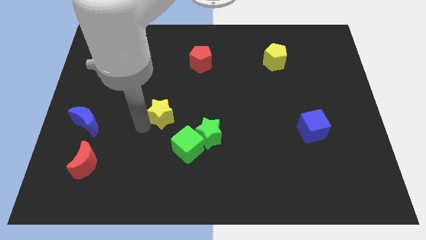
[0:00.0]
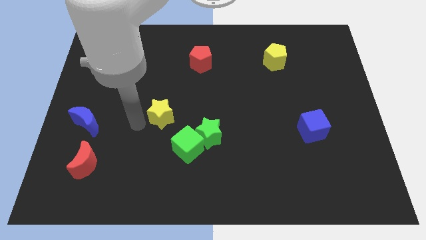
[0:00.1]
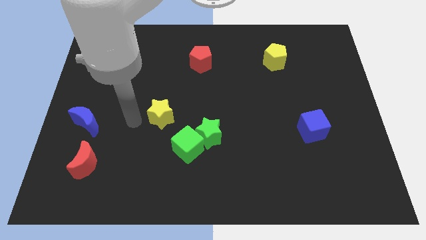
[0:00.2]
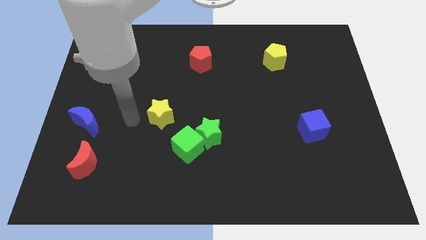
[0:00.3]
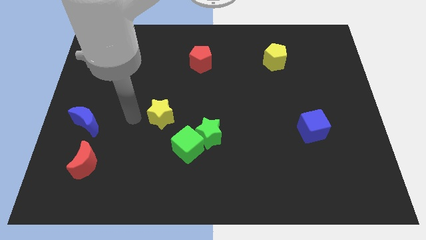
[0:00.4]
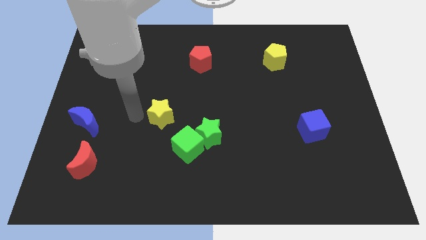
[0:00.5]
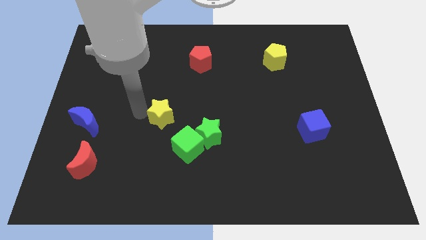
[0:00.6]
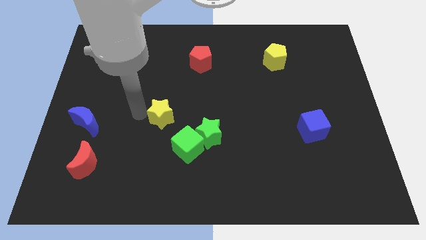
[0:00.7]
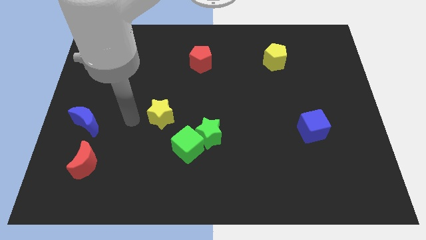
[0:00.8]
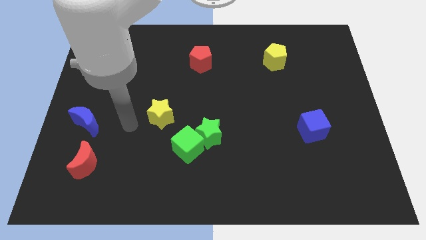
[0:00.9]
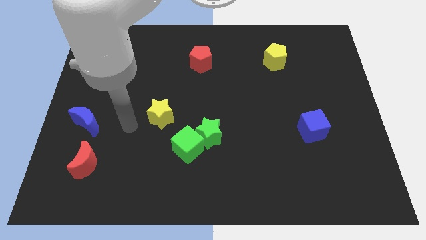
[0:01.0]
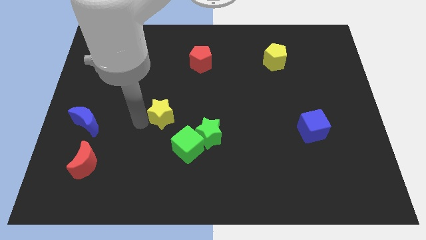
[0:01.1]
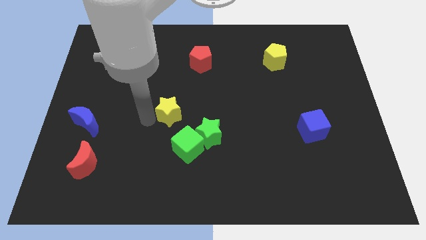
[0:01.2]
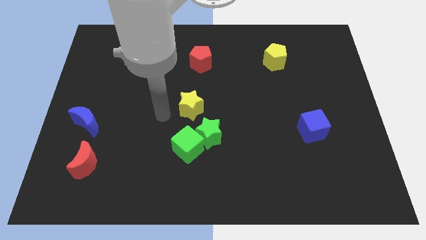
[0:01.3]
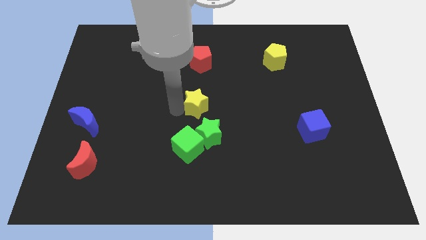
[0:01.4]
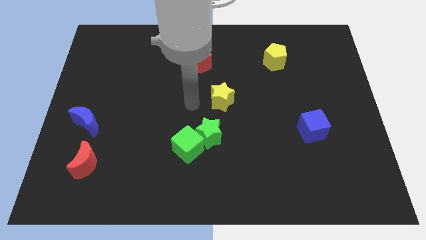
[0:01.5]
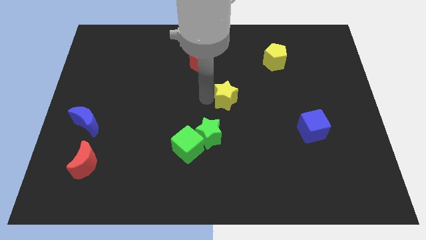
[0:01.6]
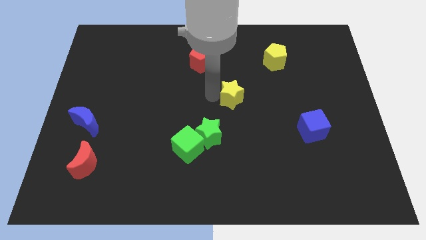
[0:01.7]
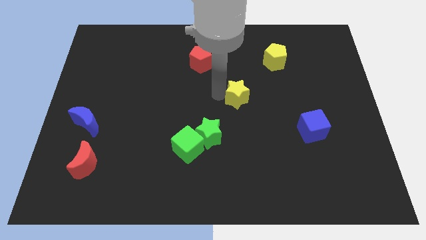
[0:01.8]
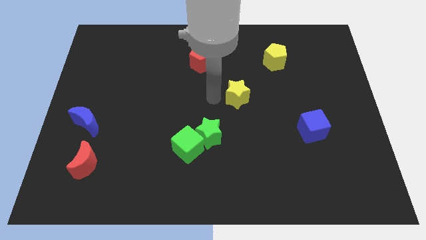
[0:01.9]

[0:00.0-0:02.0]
move the yellow star between green star and yellow pentagon

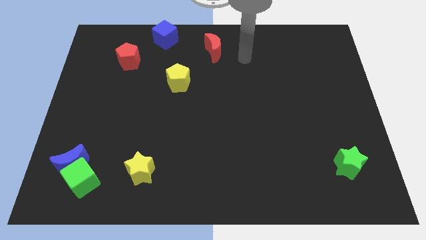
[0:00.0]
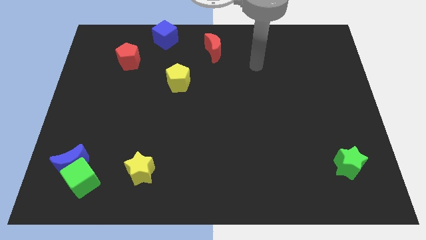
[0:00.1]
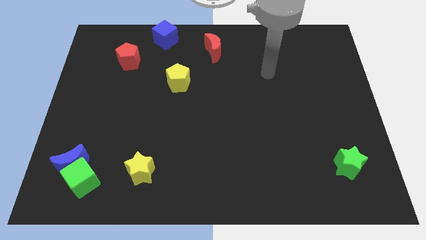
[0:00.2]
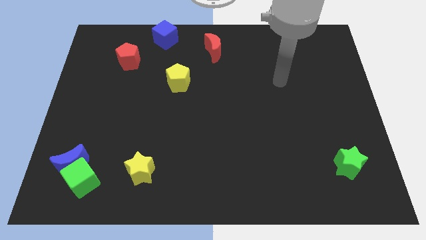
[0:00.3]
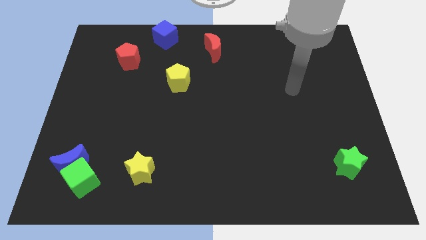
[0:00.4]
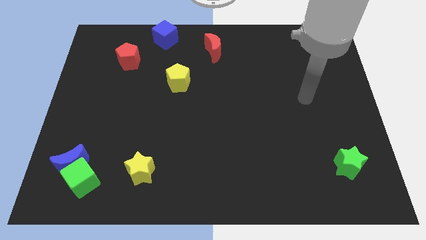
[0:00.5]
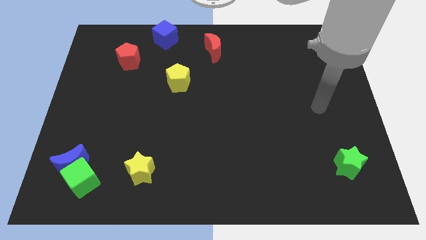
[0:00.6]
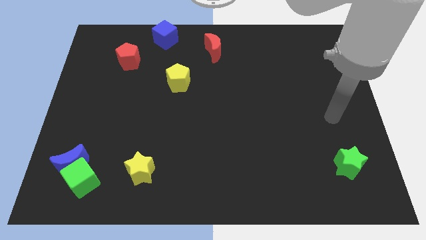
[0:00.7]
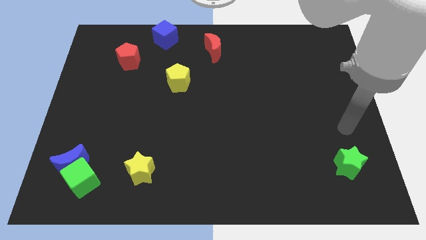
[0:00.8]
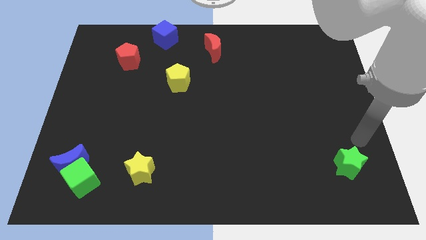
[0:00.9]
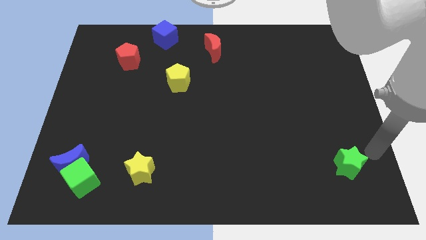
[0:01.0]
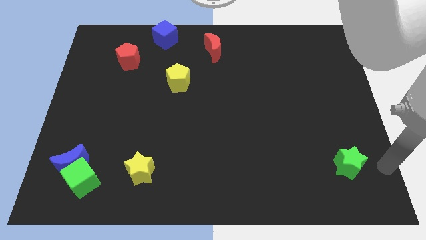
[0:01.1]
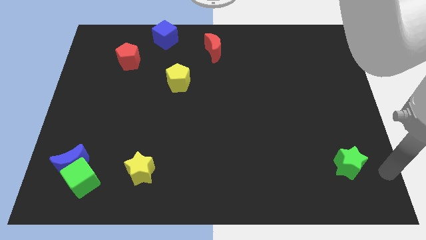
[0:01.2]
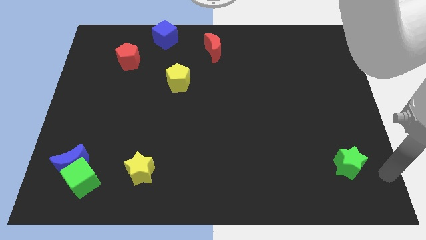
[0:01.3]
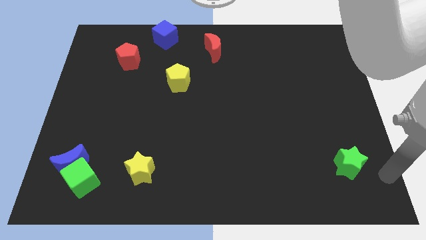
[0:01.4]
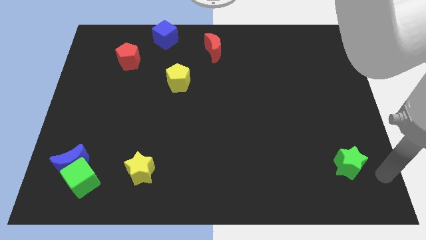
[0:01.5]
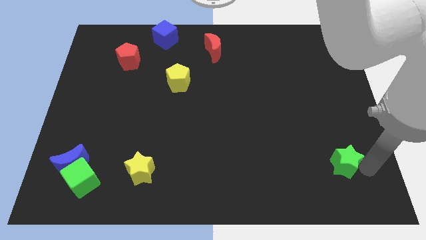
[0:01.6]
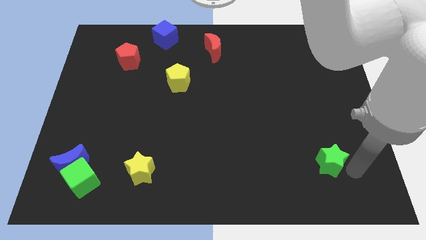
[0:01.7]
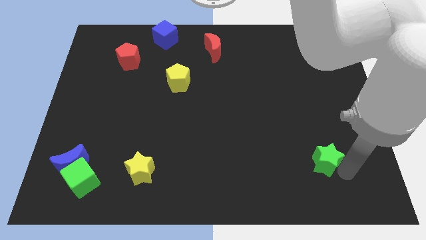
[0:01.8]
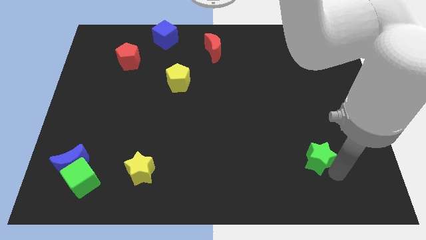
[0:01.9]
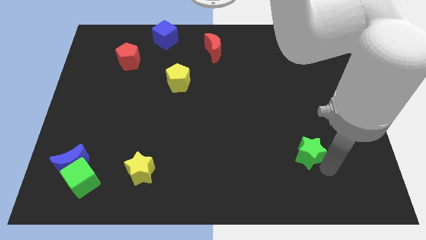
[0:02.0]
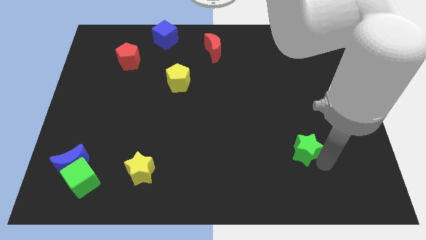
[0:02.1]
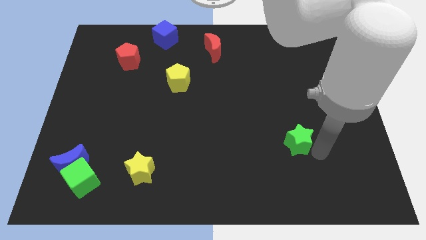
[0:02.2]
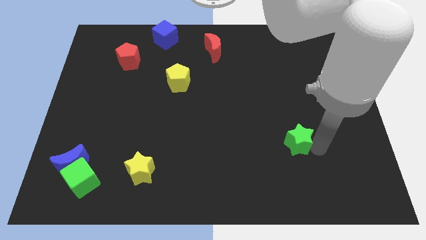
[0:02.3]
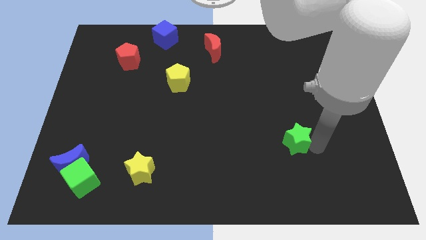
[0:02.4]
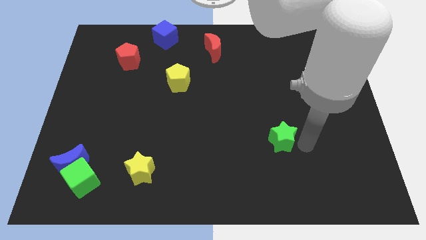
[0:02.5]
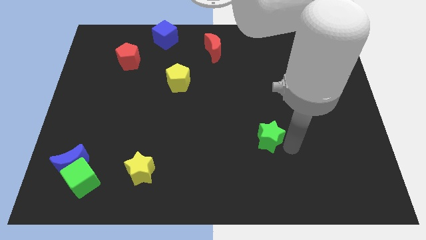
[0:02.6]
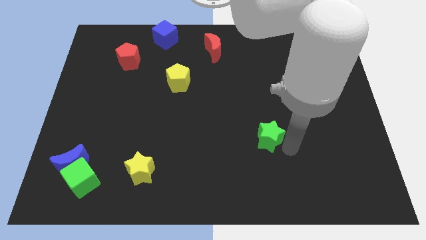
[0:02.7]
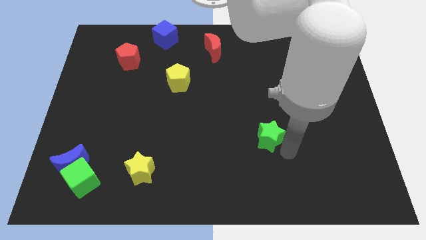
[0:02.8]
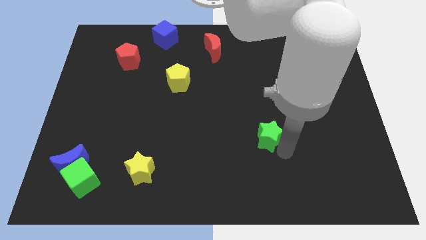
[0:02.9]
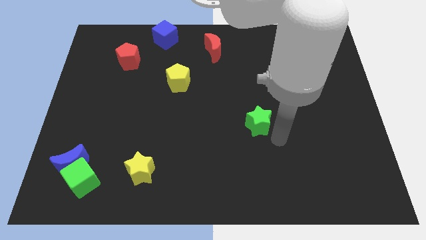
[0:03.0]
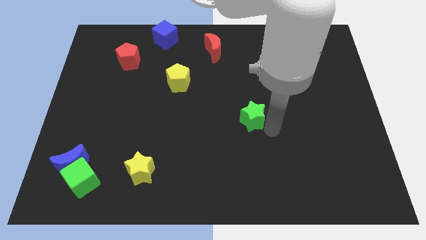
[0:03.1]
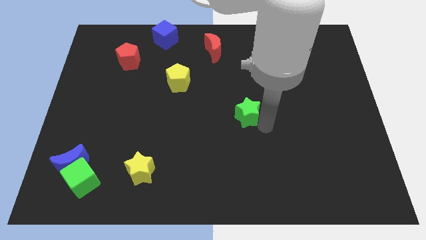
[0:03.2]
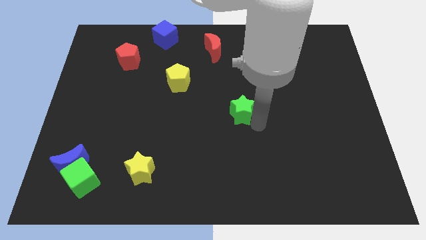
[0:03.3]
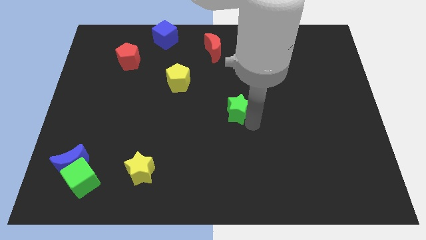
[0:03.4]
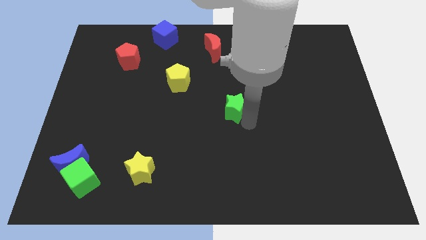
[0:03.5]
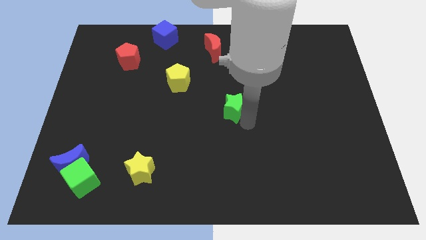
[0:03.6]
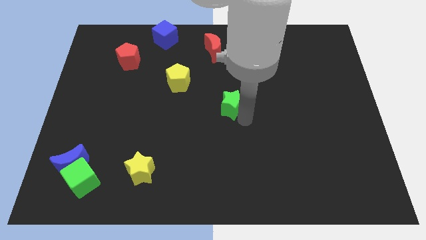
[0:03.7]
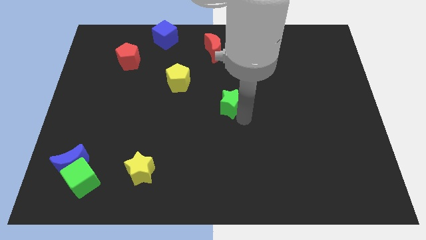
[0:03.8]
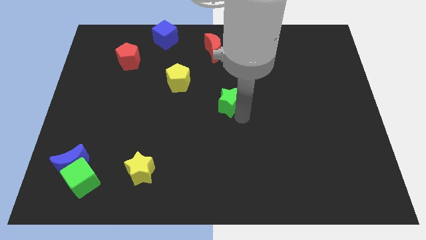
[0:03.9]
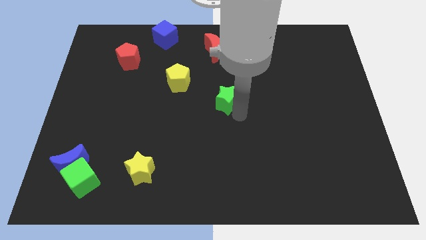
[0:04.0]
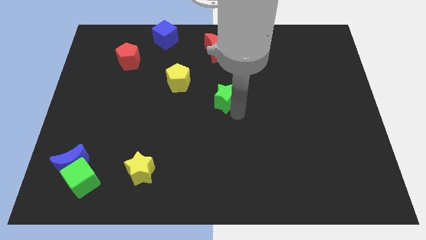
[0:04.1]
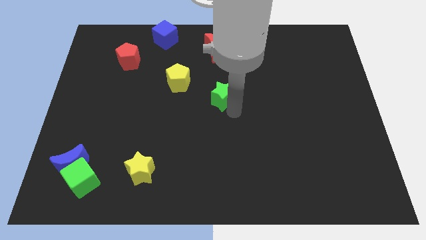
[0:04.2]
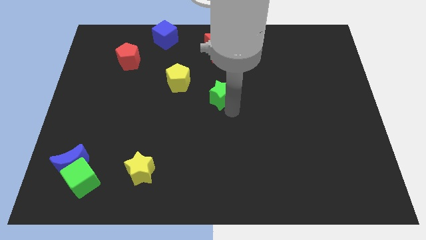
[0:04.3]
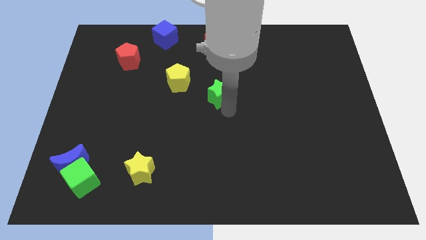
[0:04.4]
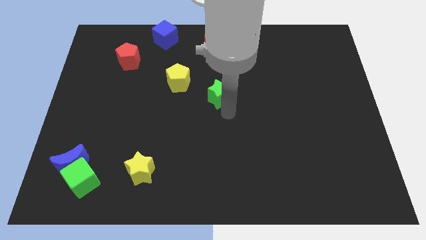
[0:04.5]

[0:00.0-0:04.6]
move the green star towards the right side of the yellow pentagon

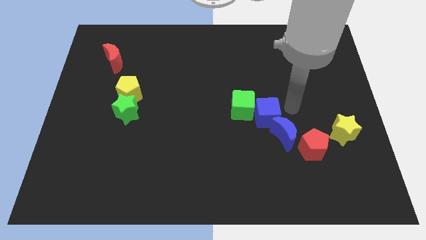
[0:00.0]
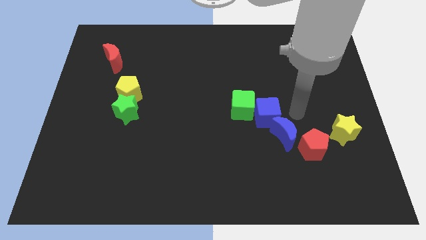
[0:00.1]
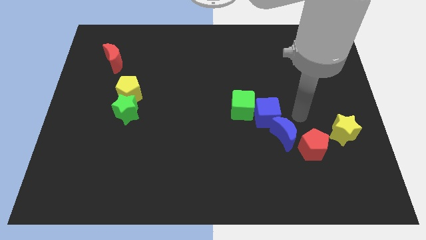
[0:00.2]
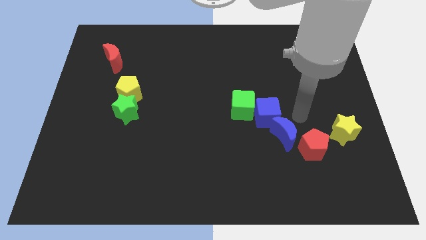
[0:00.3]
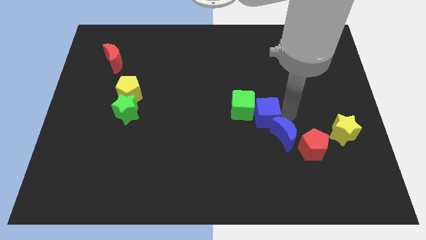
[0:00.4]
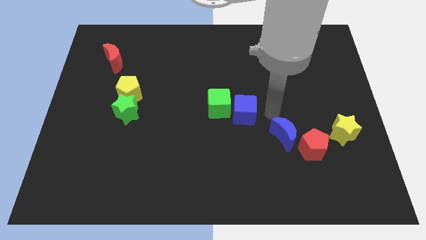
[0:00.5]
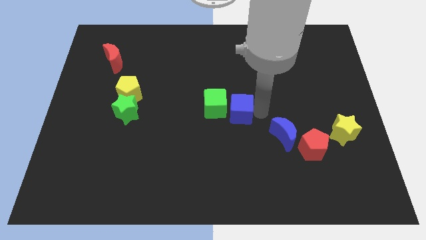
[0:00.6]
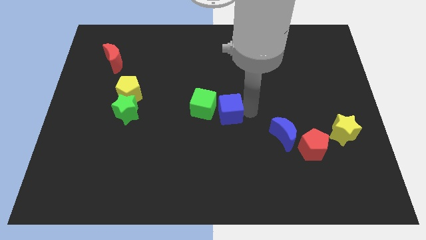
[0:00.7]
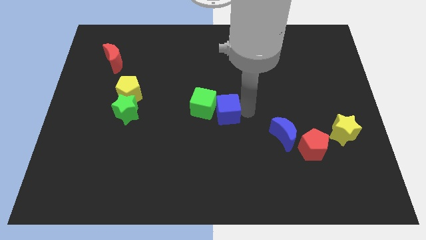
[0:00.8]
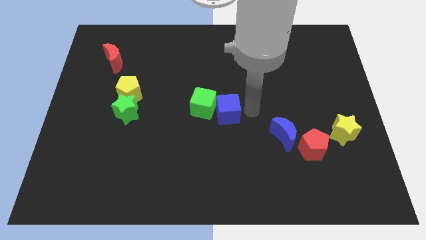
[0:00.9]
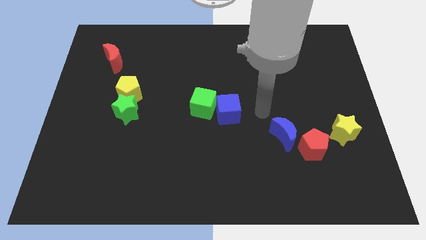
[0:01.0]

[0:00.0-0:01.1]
place blue cube green cube in the center

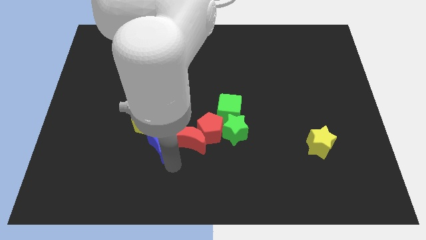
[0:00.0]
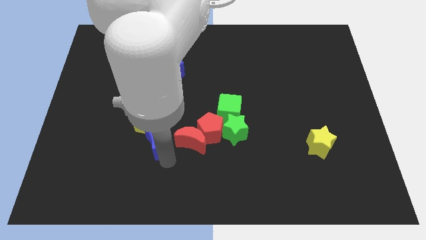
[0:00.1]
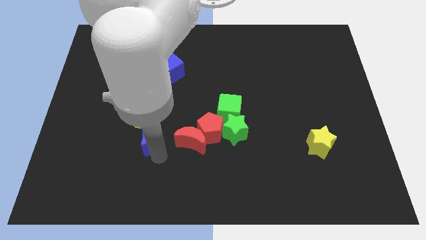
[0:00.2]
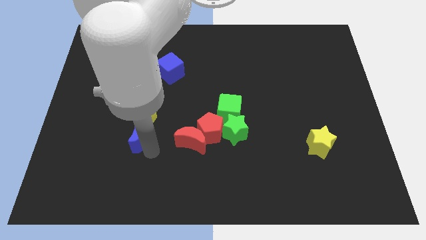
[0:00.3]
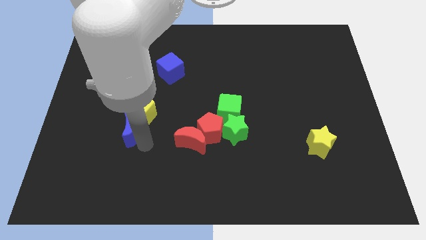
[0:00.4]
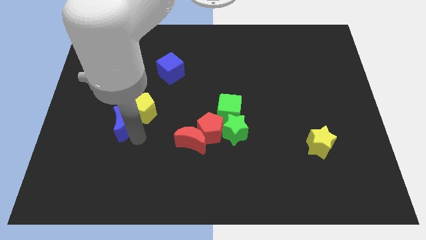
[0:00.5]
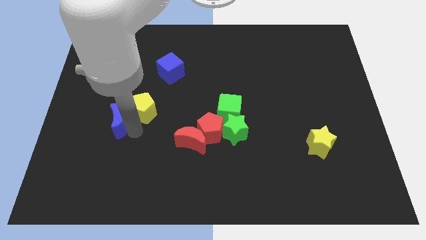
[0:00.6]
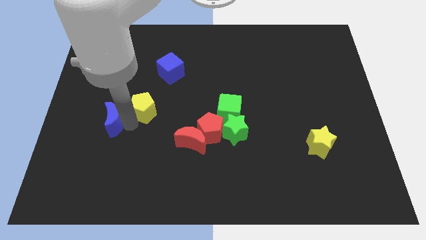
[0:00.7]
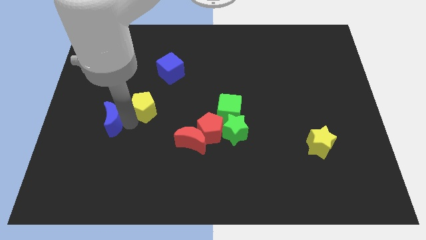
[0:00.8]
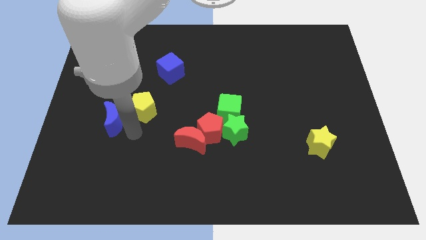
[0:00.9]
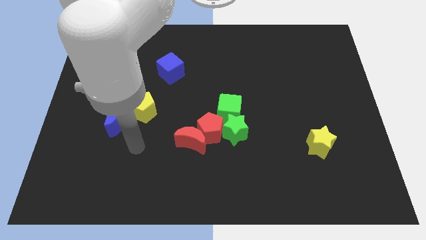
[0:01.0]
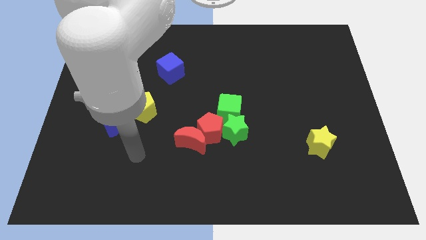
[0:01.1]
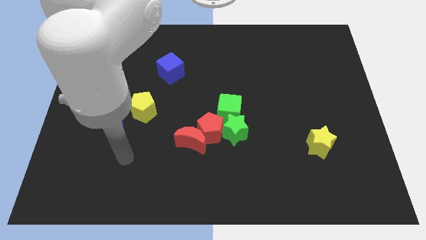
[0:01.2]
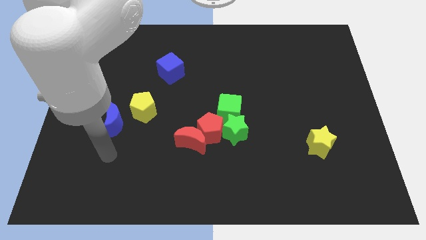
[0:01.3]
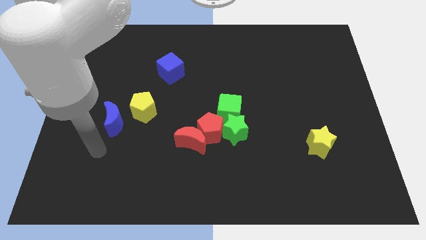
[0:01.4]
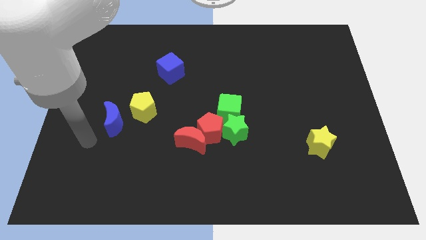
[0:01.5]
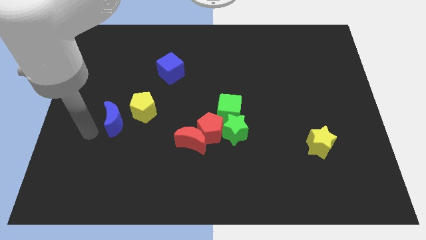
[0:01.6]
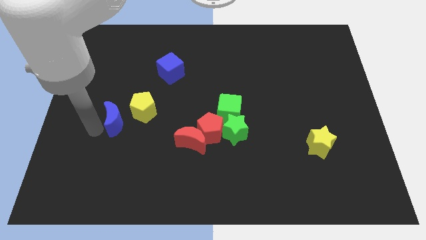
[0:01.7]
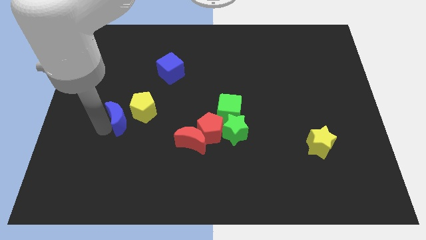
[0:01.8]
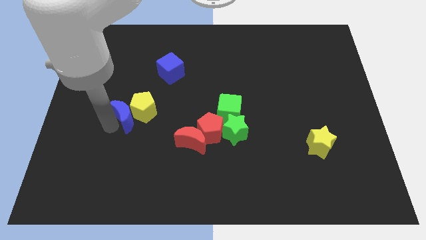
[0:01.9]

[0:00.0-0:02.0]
place the blue moon to the left of the yellow pentagon
